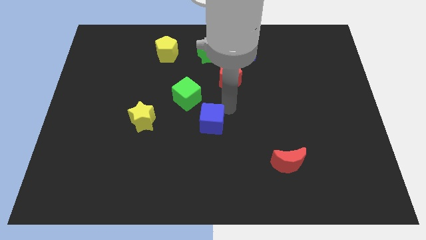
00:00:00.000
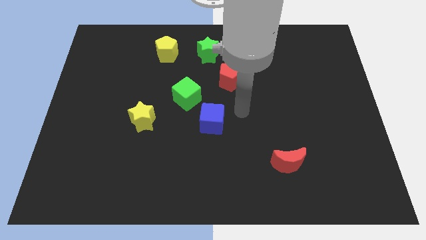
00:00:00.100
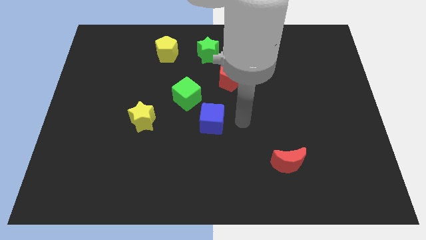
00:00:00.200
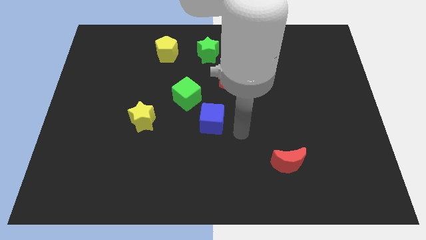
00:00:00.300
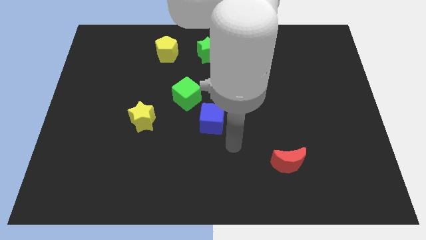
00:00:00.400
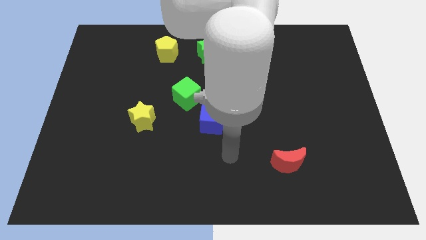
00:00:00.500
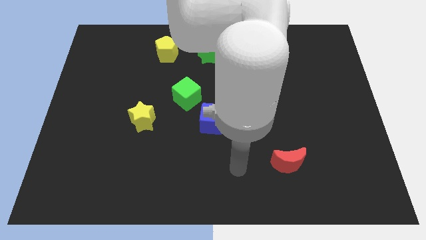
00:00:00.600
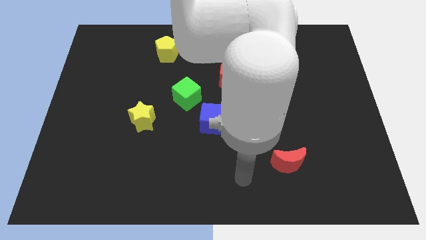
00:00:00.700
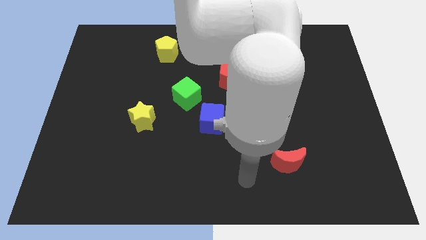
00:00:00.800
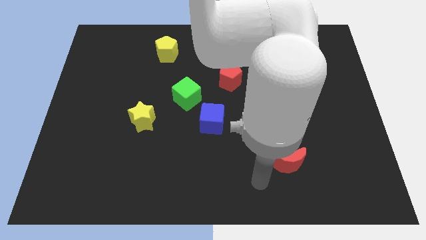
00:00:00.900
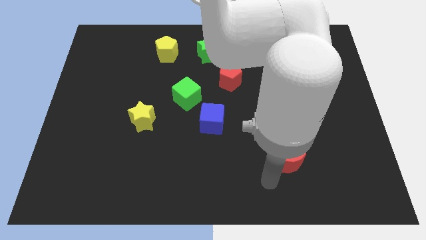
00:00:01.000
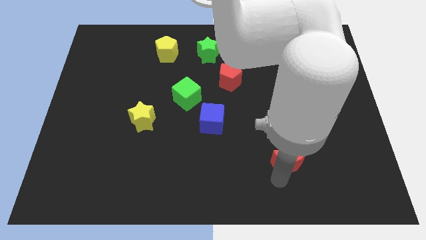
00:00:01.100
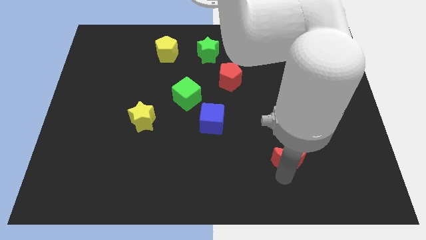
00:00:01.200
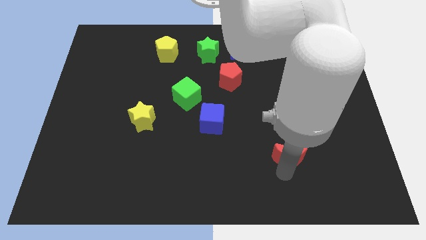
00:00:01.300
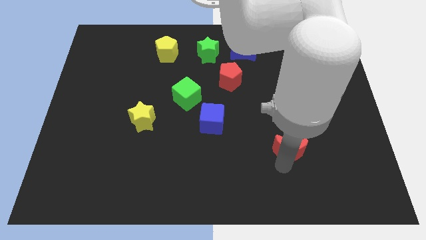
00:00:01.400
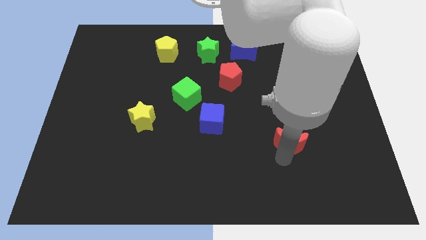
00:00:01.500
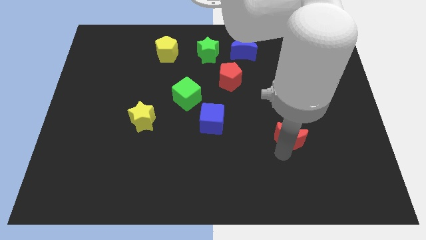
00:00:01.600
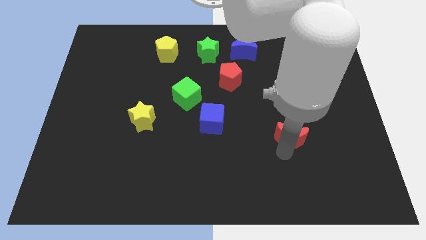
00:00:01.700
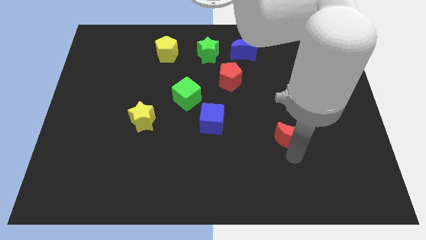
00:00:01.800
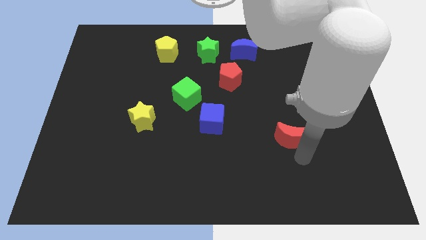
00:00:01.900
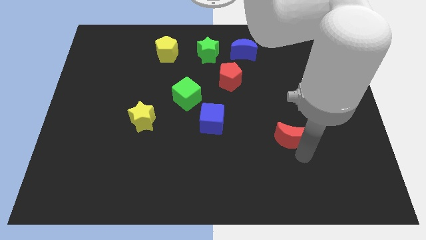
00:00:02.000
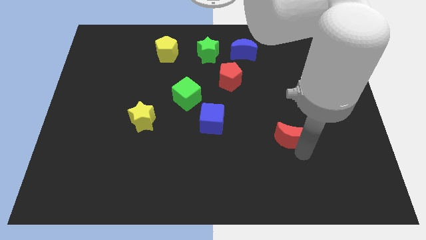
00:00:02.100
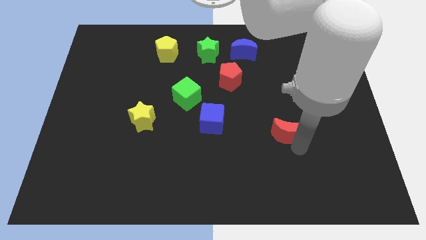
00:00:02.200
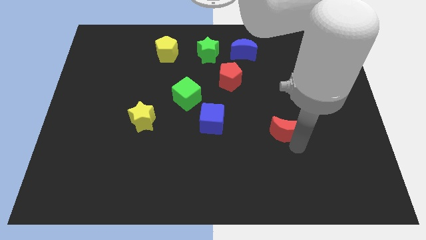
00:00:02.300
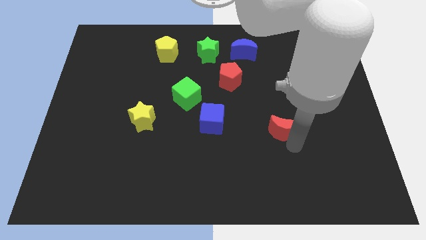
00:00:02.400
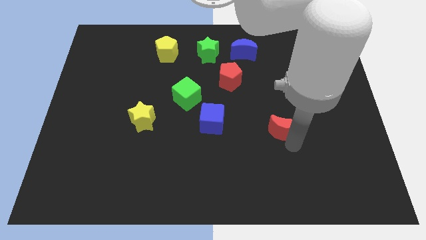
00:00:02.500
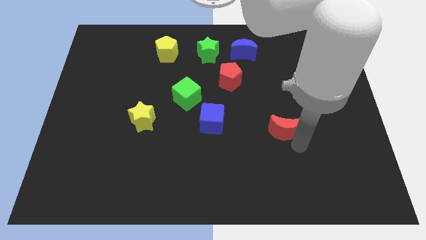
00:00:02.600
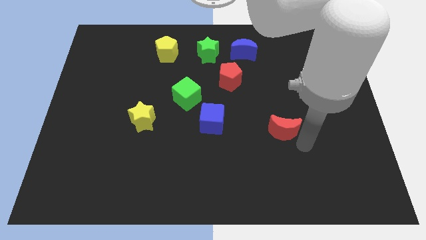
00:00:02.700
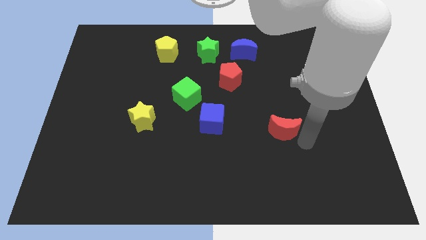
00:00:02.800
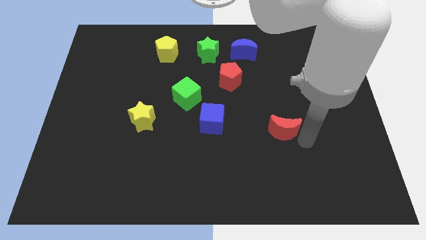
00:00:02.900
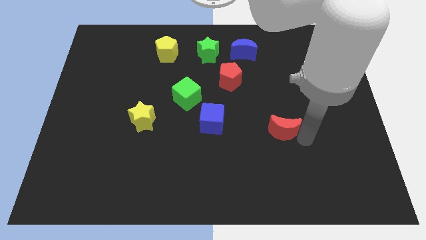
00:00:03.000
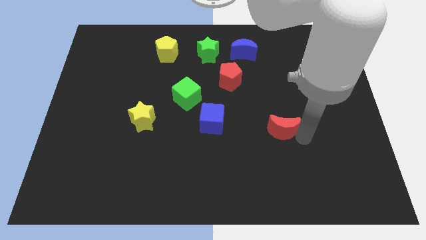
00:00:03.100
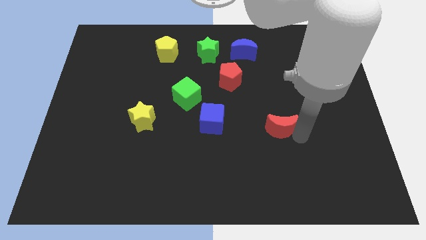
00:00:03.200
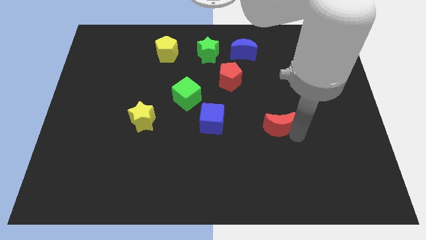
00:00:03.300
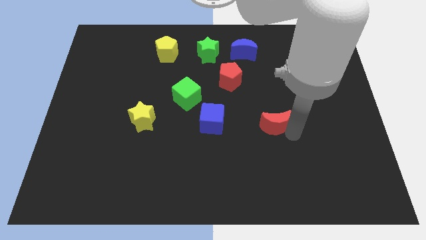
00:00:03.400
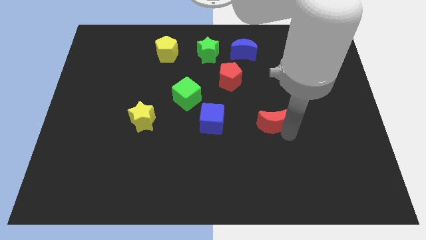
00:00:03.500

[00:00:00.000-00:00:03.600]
place the red crescent parallel to the blue cube

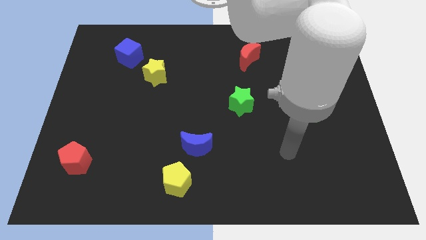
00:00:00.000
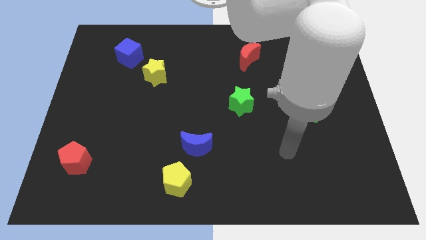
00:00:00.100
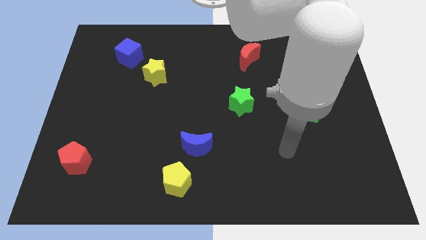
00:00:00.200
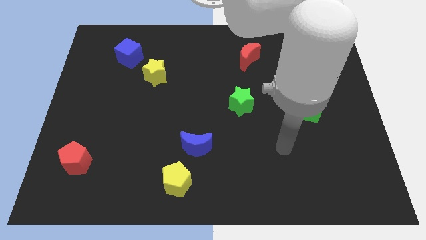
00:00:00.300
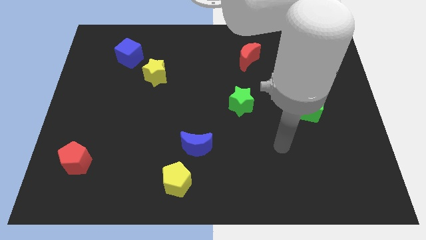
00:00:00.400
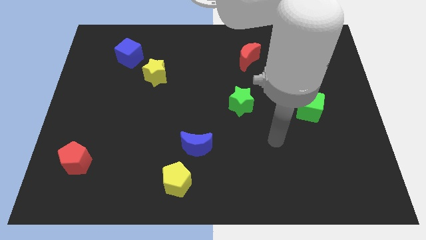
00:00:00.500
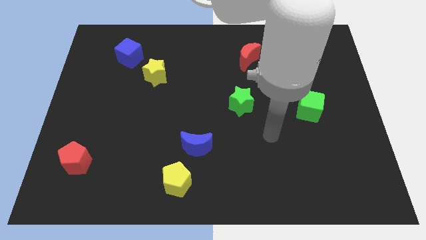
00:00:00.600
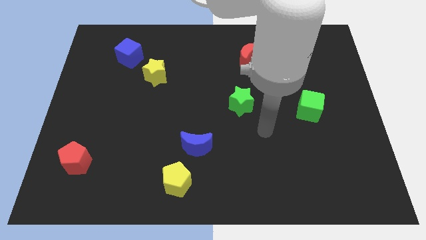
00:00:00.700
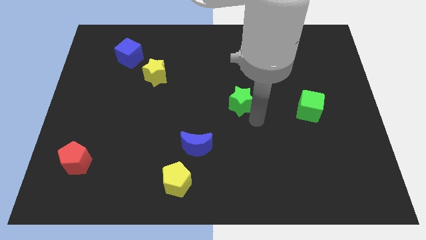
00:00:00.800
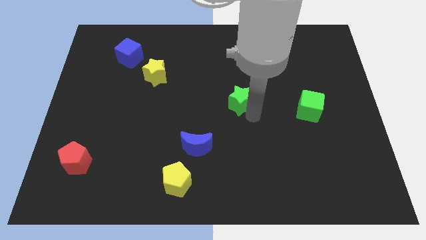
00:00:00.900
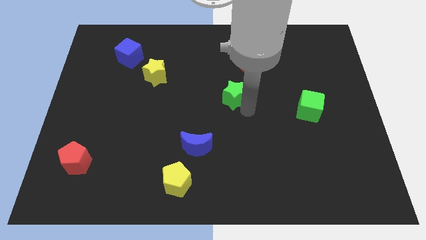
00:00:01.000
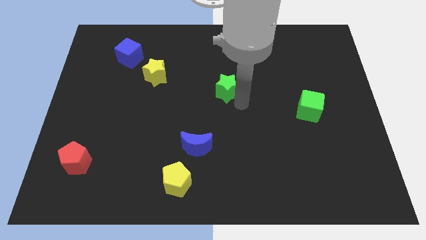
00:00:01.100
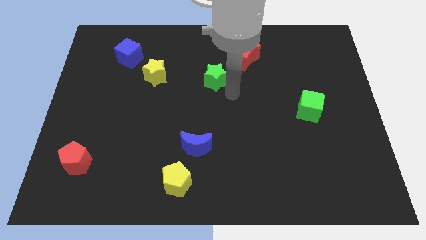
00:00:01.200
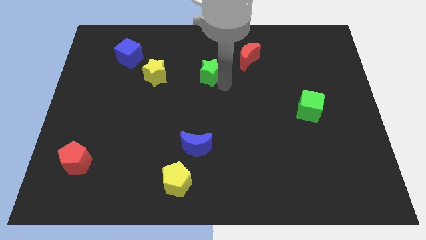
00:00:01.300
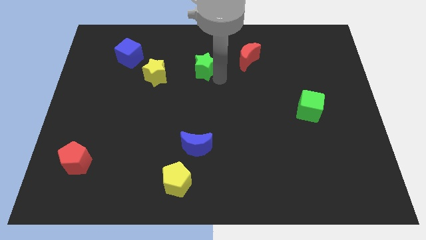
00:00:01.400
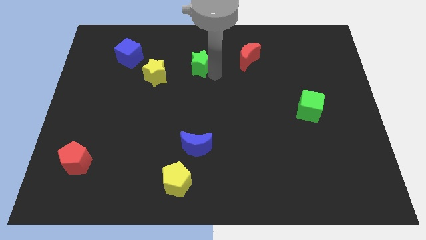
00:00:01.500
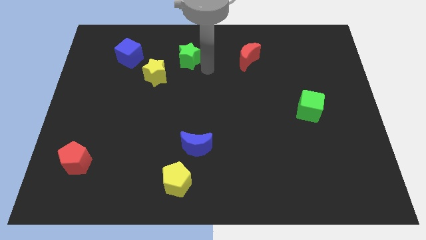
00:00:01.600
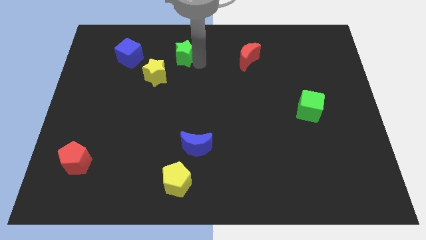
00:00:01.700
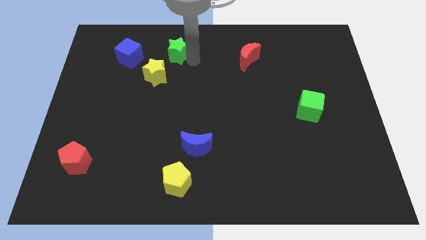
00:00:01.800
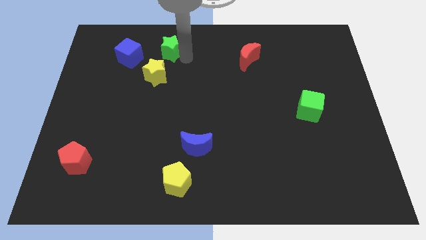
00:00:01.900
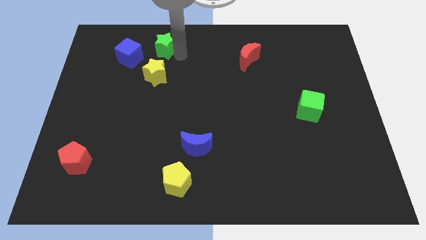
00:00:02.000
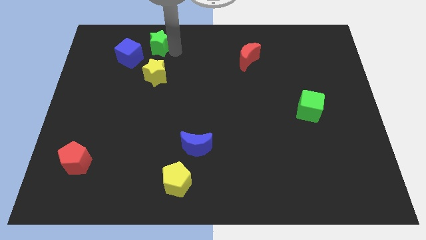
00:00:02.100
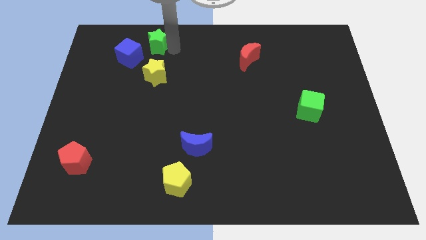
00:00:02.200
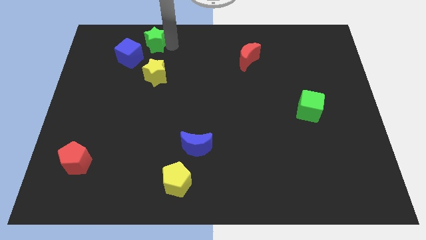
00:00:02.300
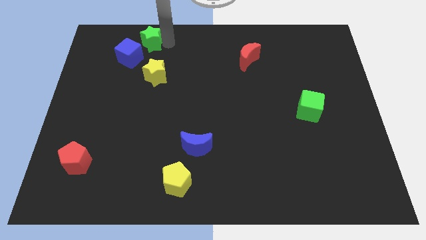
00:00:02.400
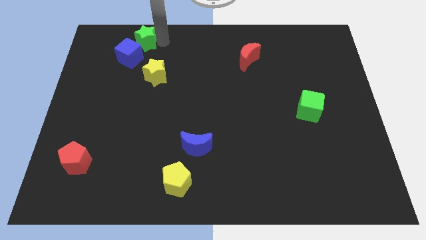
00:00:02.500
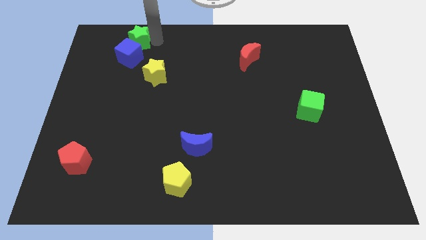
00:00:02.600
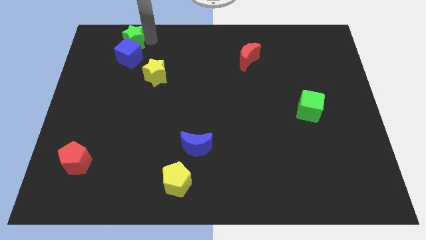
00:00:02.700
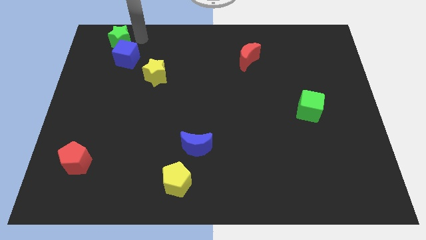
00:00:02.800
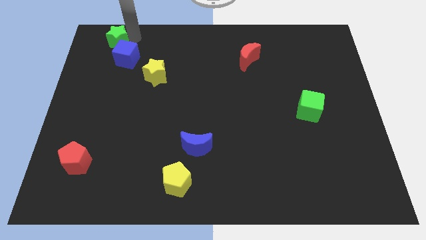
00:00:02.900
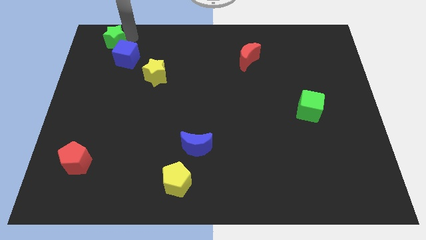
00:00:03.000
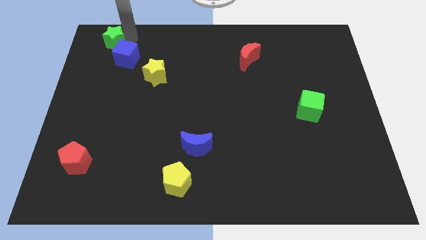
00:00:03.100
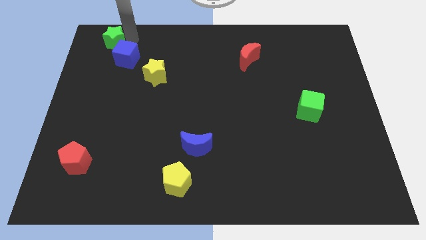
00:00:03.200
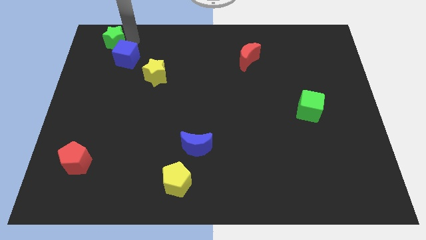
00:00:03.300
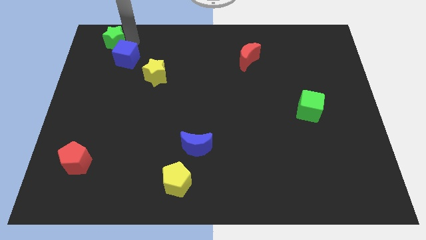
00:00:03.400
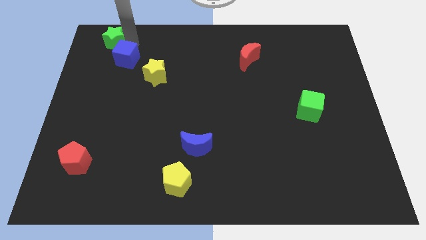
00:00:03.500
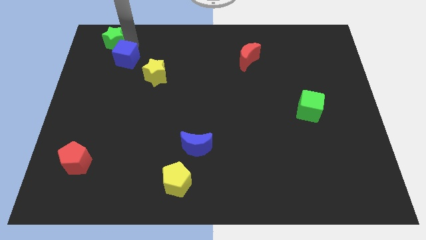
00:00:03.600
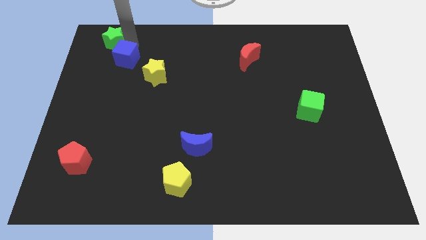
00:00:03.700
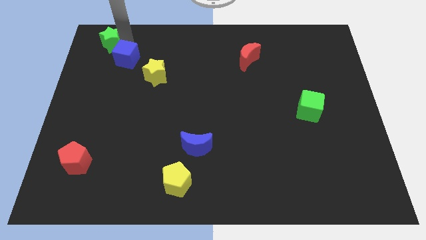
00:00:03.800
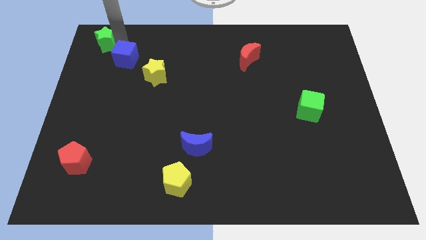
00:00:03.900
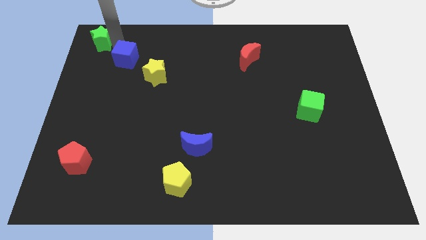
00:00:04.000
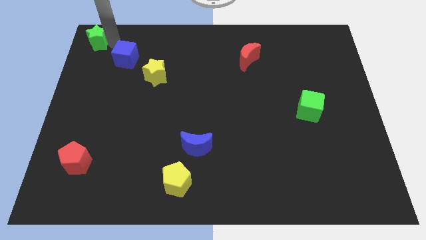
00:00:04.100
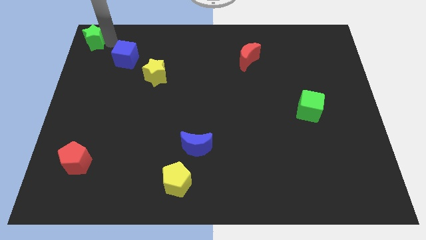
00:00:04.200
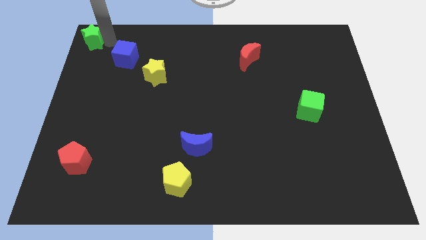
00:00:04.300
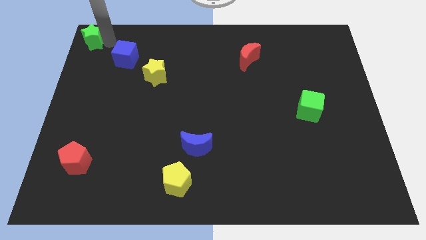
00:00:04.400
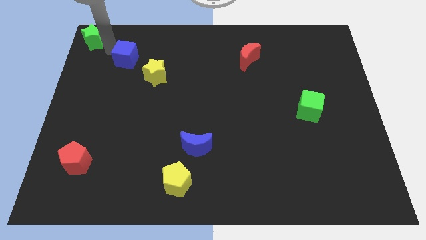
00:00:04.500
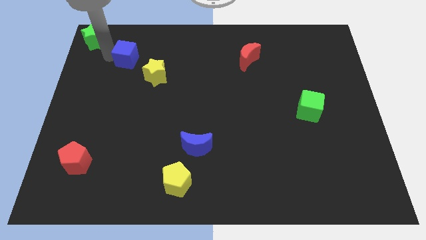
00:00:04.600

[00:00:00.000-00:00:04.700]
push the green star to the top left corner

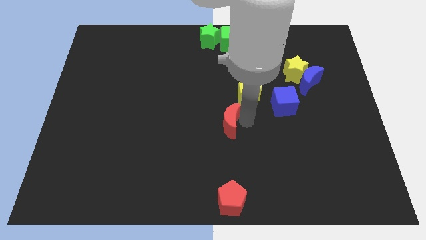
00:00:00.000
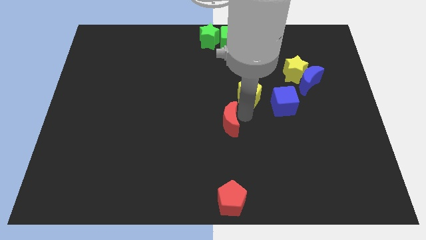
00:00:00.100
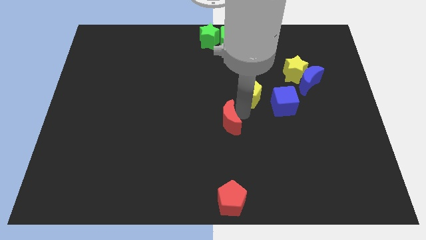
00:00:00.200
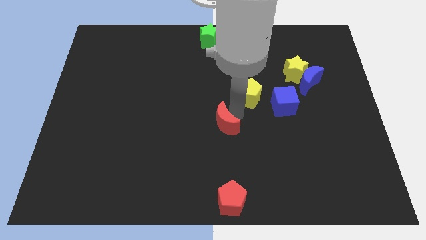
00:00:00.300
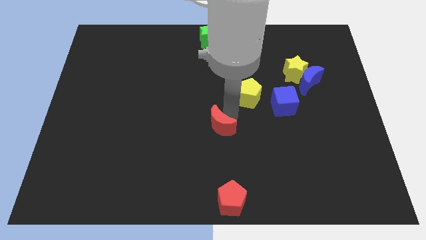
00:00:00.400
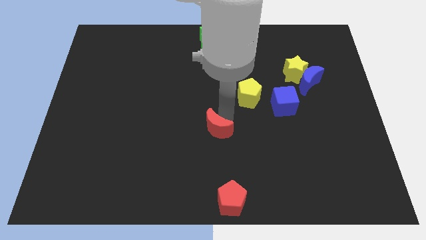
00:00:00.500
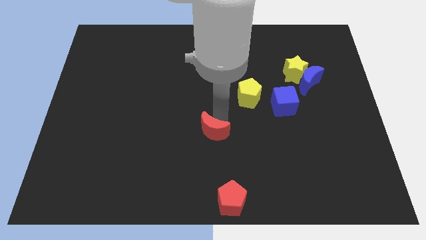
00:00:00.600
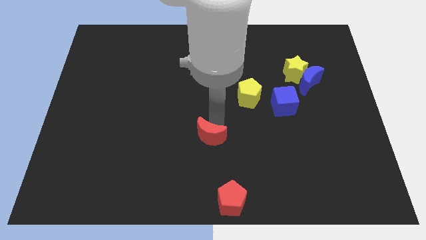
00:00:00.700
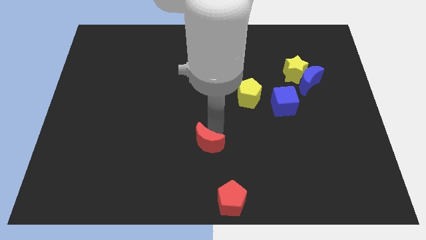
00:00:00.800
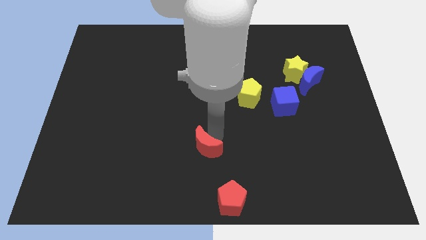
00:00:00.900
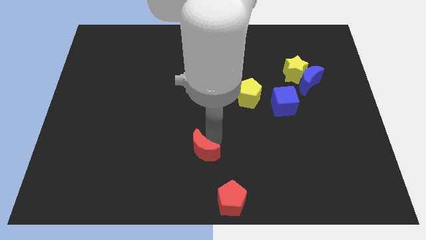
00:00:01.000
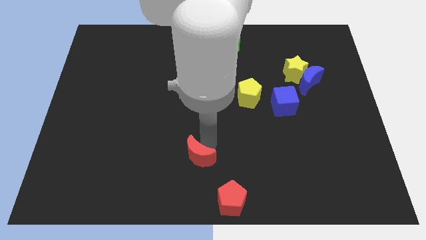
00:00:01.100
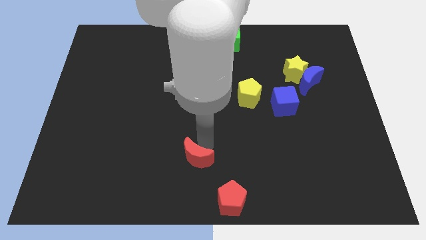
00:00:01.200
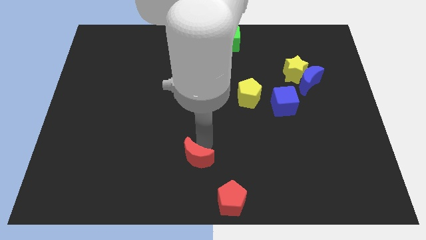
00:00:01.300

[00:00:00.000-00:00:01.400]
place the red moon diagonally to the top left of the red pentagon
